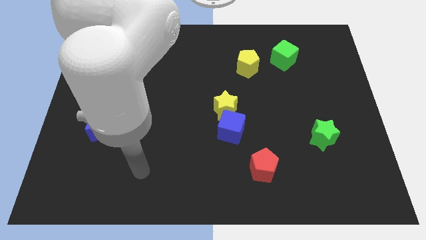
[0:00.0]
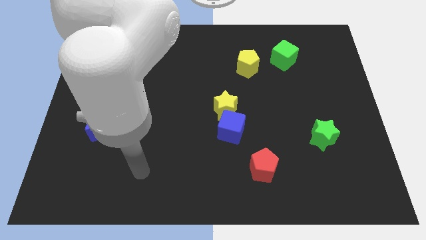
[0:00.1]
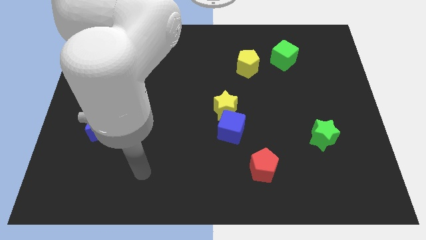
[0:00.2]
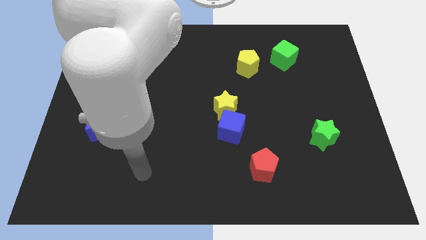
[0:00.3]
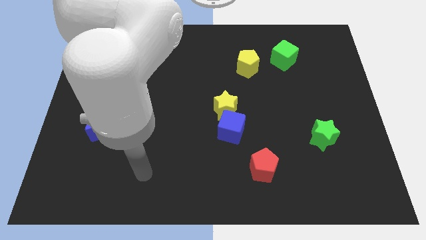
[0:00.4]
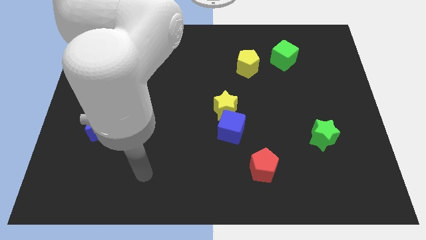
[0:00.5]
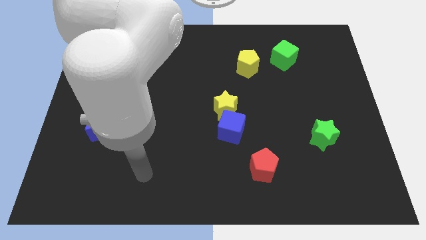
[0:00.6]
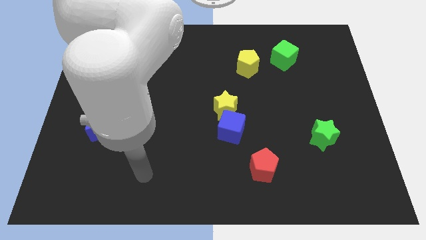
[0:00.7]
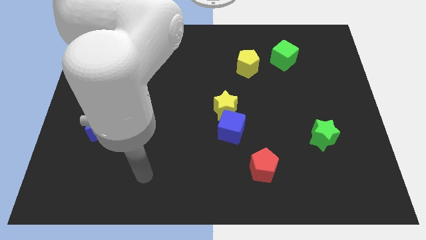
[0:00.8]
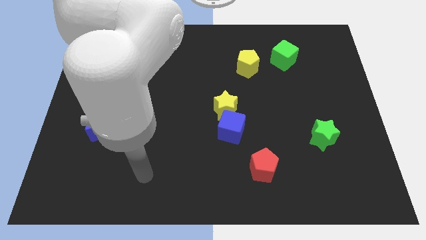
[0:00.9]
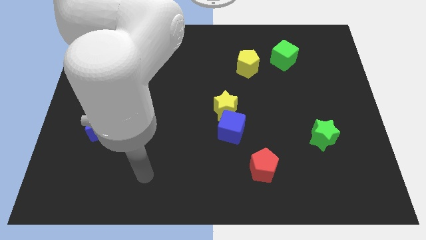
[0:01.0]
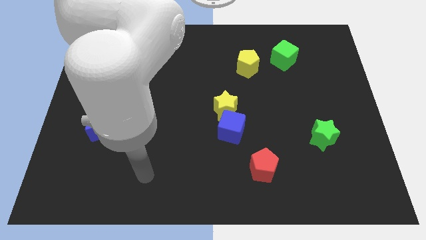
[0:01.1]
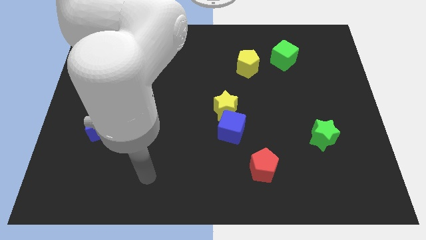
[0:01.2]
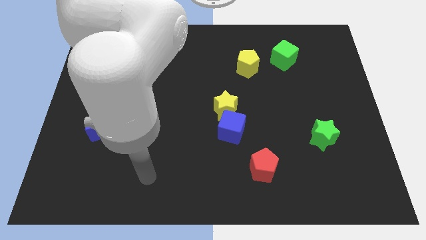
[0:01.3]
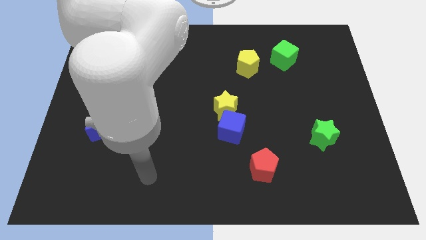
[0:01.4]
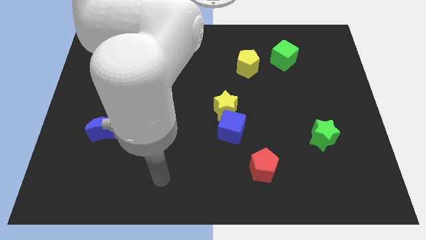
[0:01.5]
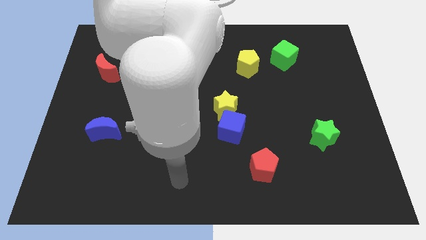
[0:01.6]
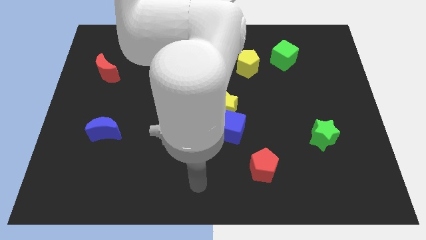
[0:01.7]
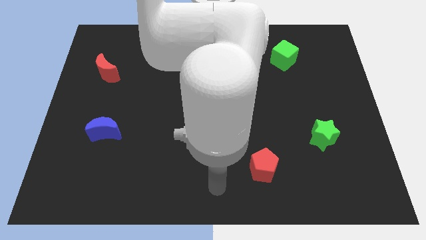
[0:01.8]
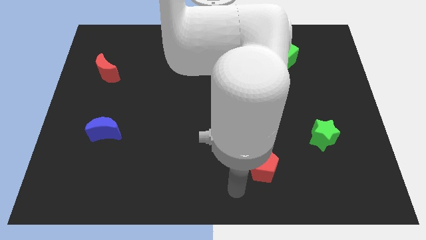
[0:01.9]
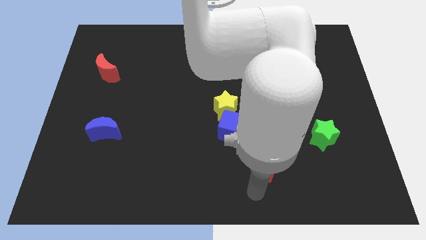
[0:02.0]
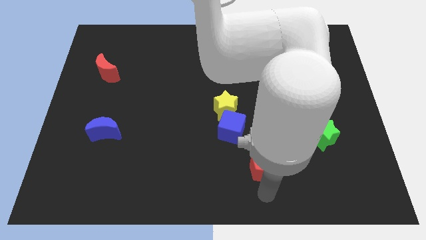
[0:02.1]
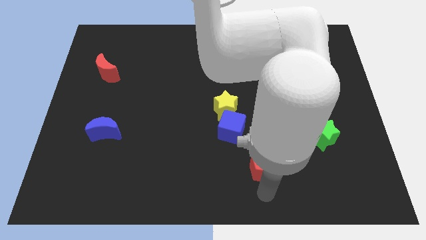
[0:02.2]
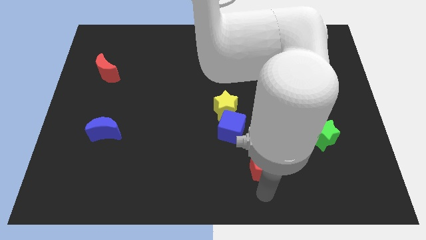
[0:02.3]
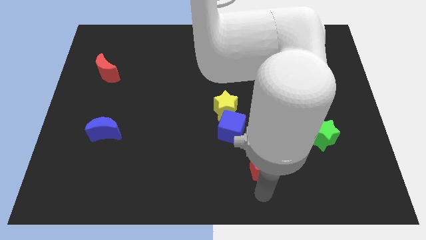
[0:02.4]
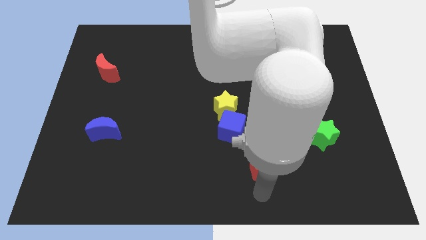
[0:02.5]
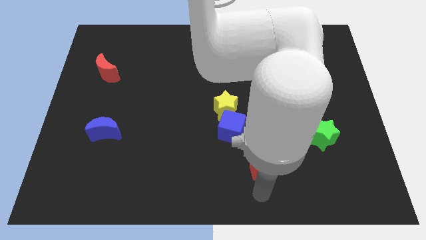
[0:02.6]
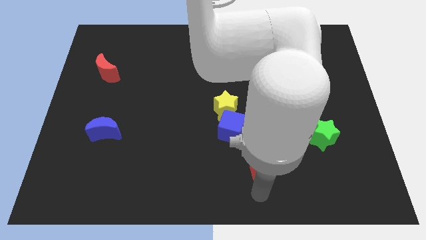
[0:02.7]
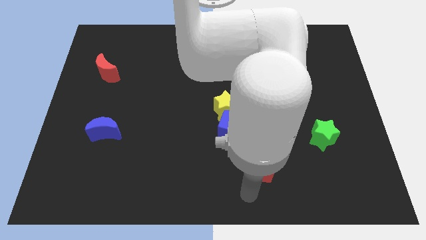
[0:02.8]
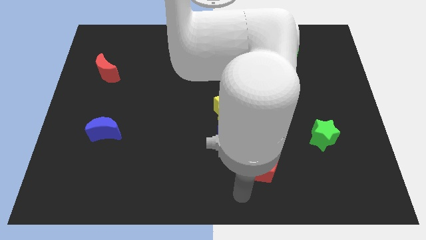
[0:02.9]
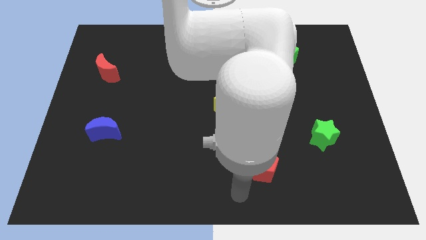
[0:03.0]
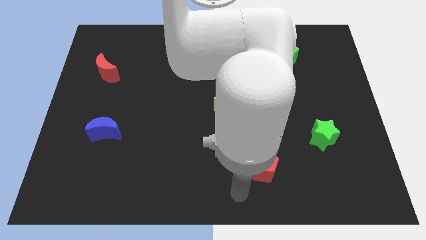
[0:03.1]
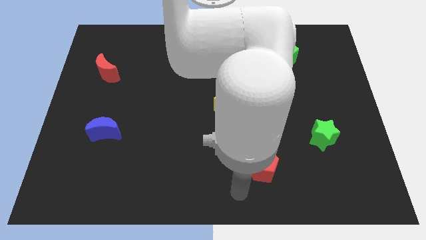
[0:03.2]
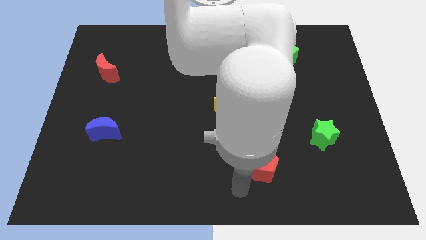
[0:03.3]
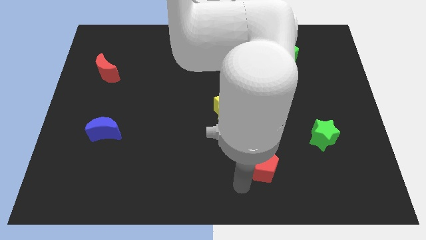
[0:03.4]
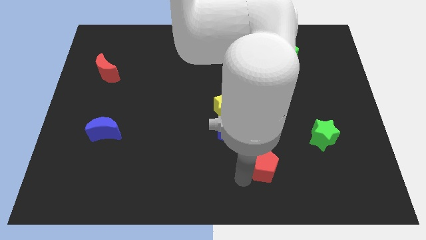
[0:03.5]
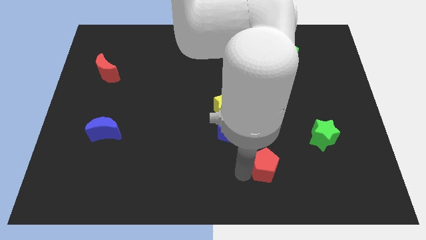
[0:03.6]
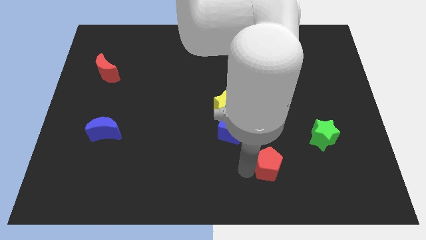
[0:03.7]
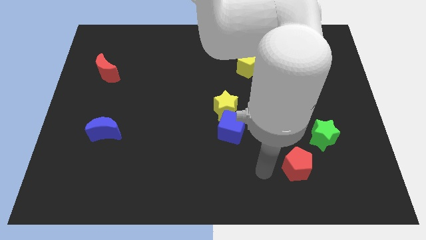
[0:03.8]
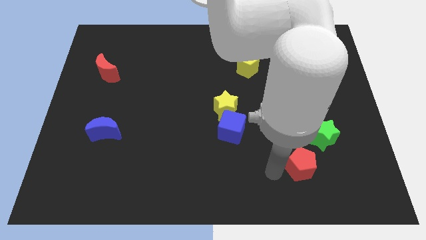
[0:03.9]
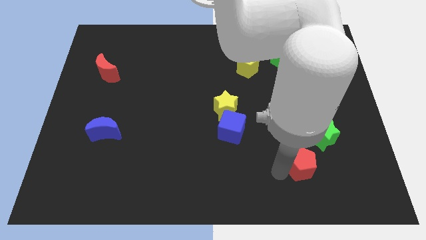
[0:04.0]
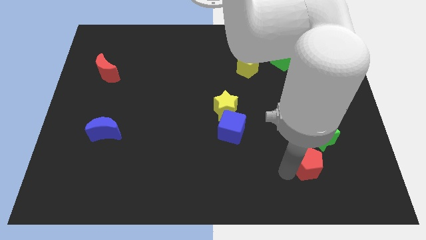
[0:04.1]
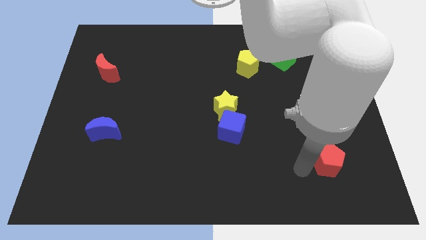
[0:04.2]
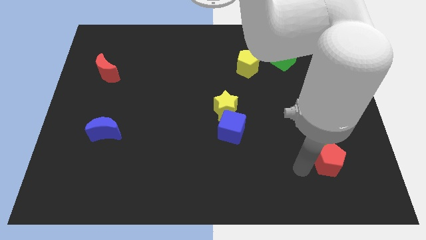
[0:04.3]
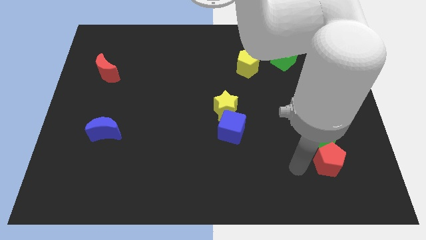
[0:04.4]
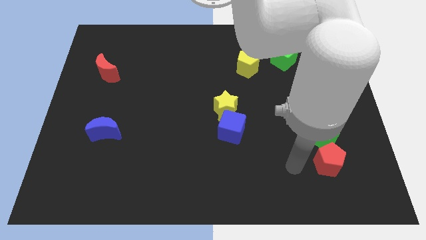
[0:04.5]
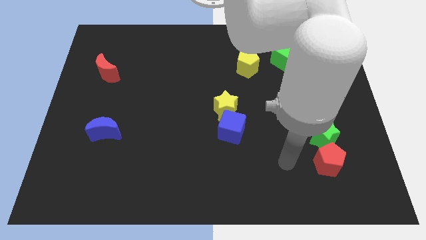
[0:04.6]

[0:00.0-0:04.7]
push the red pentagon below the green star

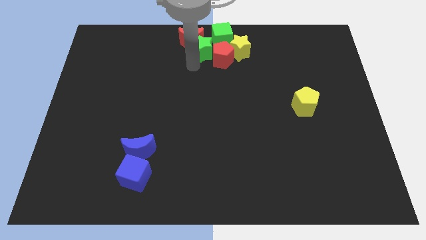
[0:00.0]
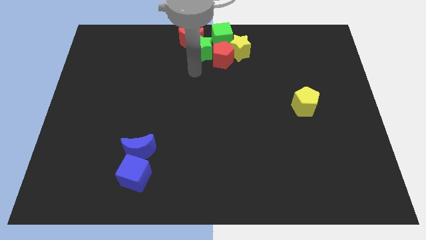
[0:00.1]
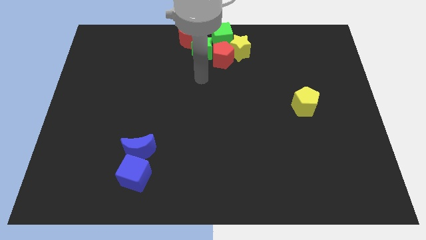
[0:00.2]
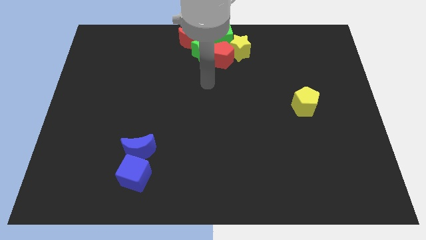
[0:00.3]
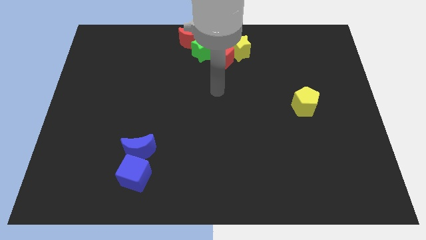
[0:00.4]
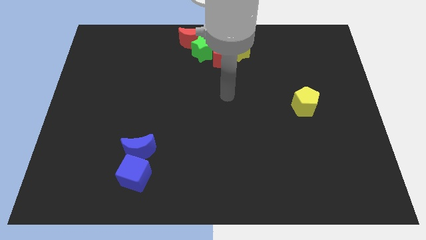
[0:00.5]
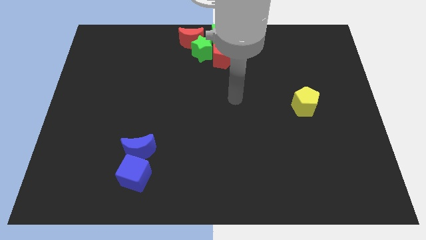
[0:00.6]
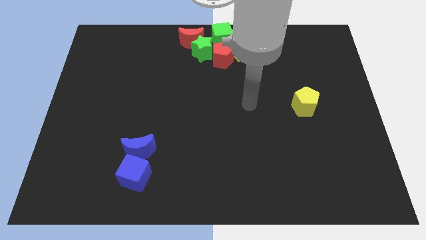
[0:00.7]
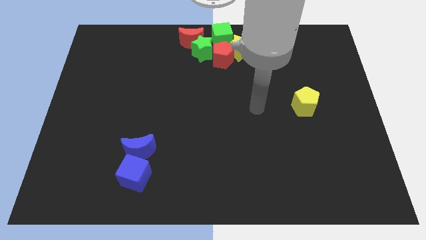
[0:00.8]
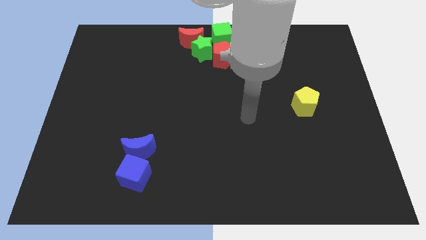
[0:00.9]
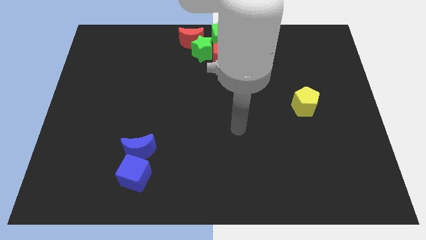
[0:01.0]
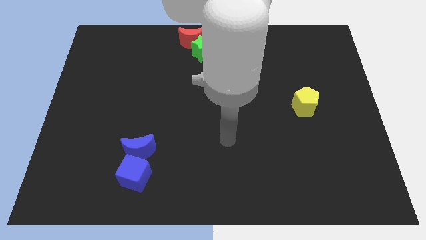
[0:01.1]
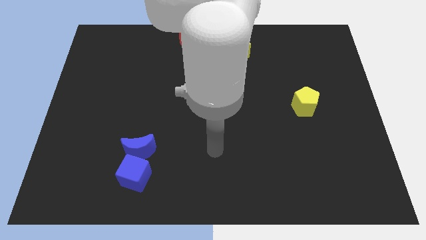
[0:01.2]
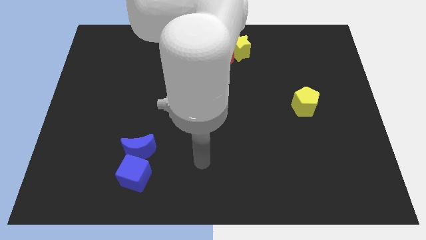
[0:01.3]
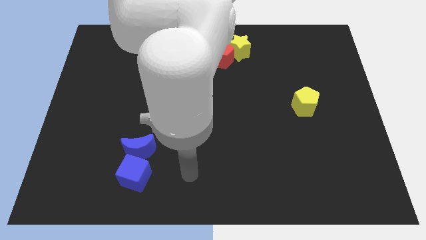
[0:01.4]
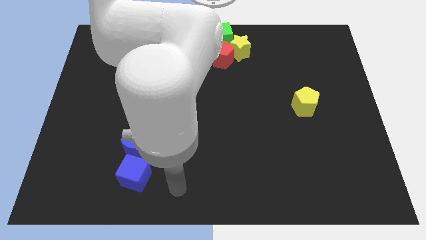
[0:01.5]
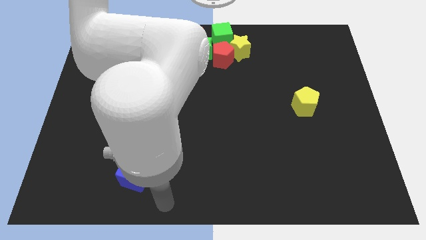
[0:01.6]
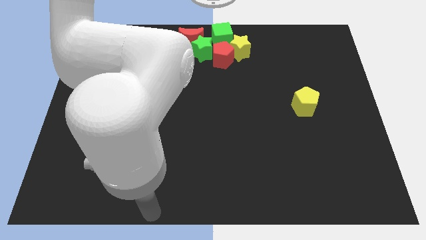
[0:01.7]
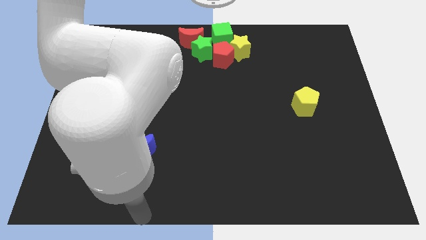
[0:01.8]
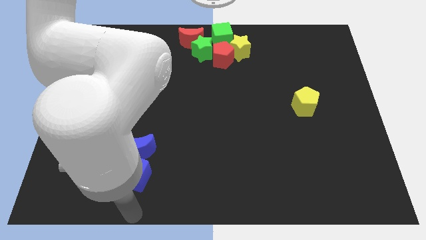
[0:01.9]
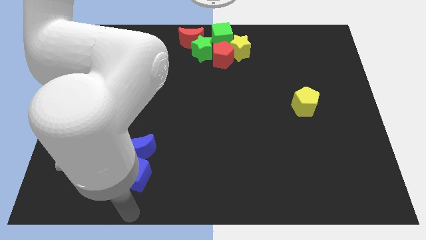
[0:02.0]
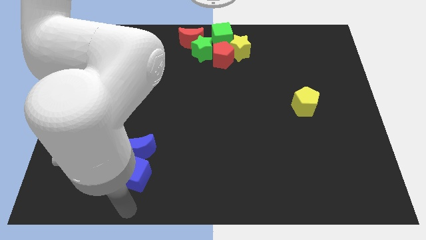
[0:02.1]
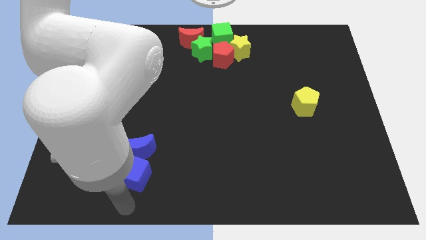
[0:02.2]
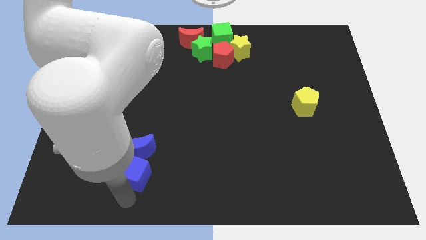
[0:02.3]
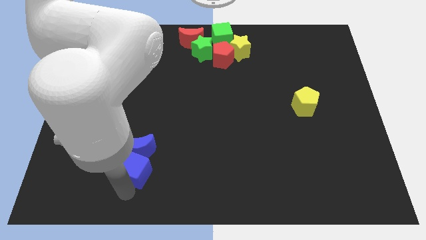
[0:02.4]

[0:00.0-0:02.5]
place the arm down to the blue cube

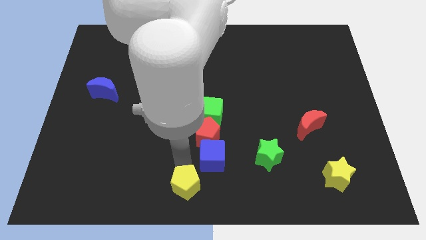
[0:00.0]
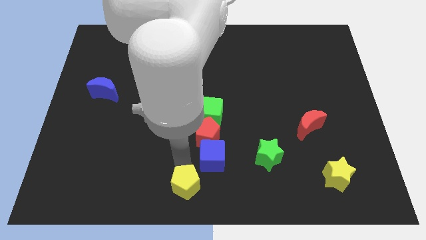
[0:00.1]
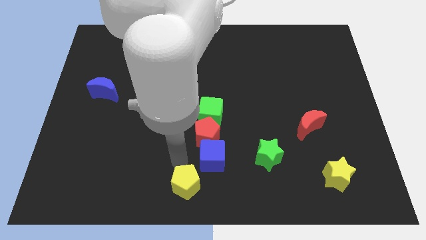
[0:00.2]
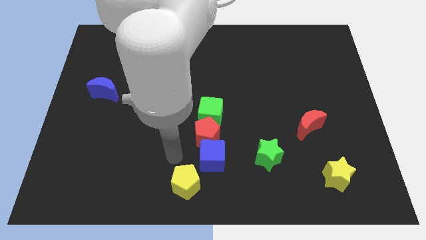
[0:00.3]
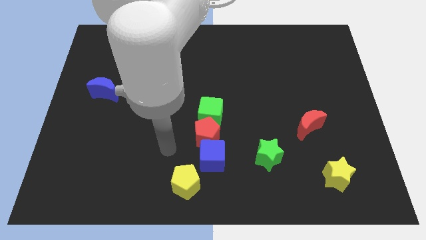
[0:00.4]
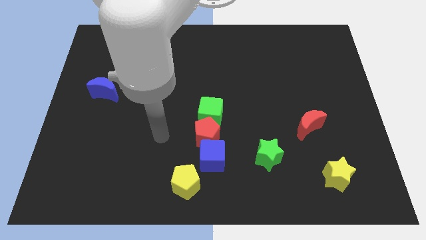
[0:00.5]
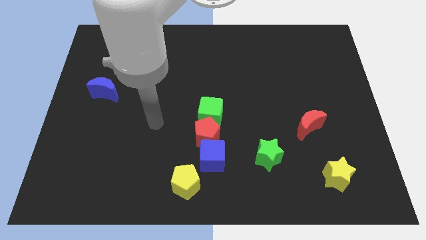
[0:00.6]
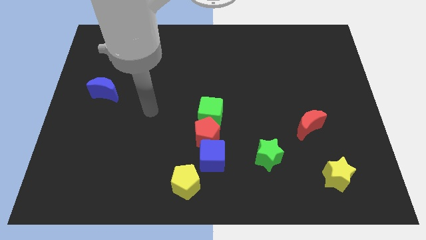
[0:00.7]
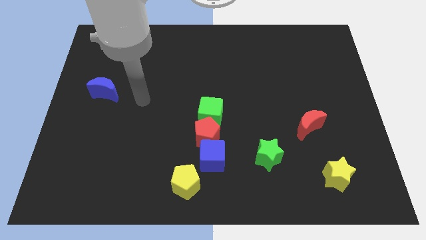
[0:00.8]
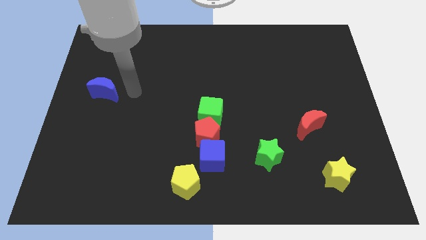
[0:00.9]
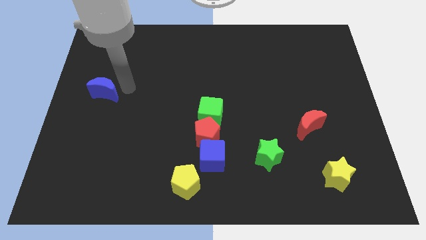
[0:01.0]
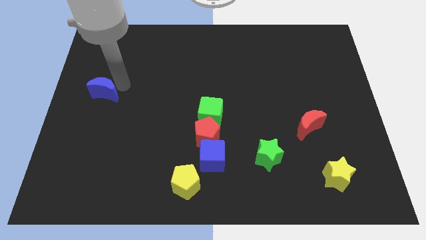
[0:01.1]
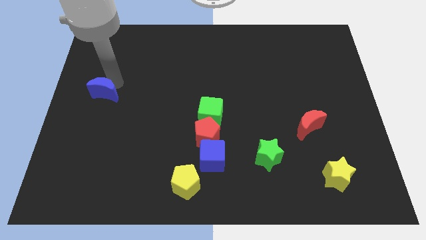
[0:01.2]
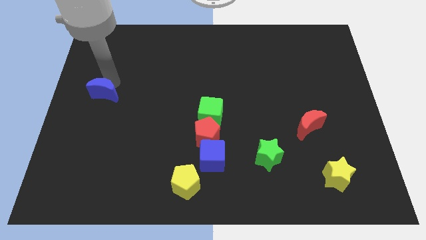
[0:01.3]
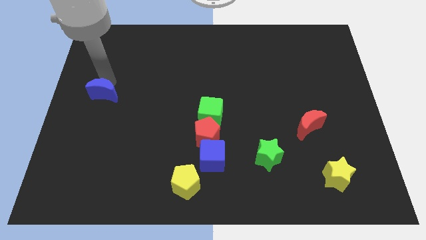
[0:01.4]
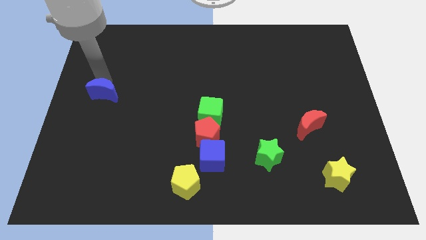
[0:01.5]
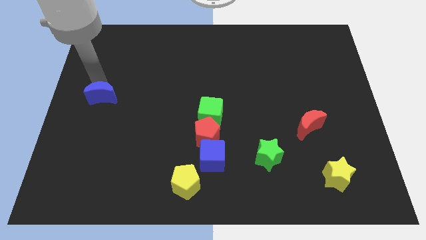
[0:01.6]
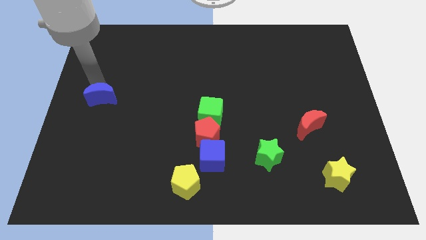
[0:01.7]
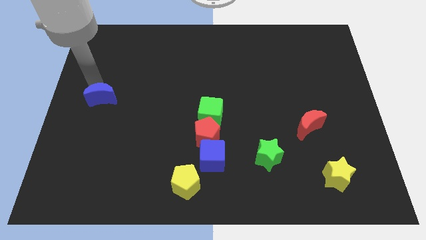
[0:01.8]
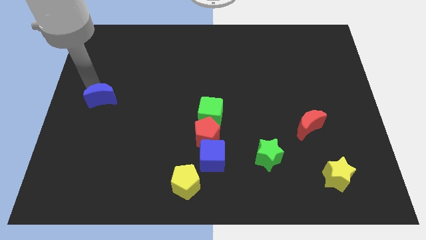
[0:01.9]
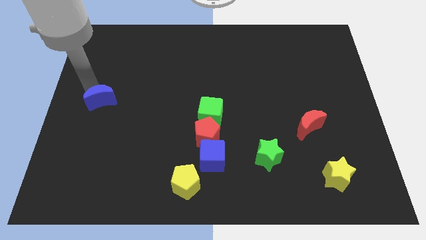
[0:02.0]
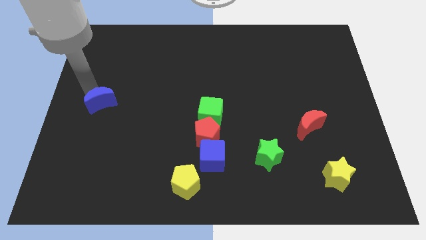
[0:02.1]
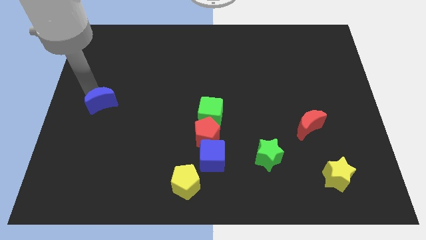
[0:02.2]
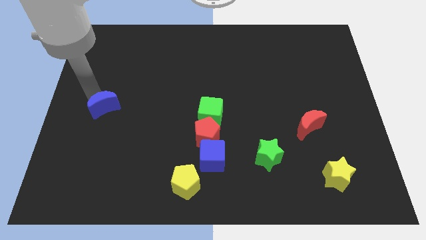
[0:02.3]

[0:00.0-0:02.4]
push blue crescent slightly to the bottom side of the board
